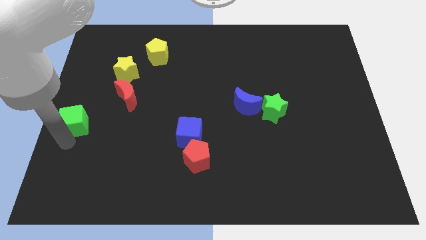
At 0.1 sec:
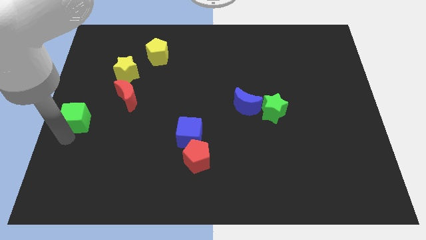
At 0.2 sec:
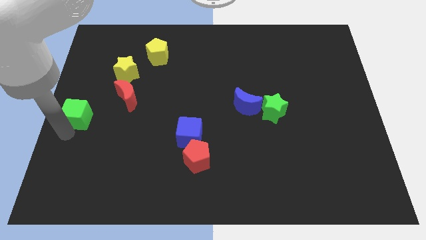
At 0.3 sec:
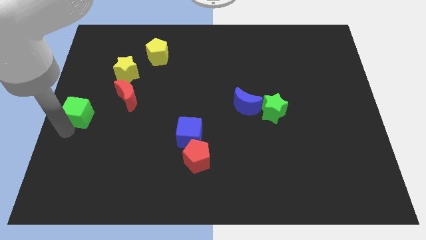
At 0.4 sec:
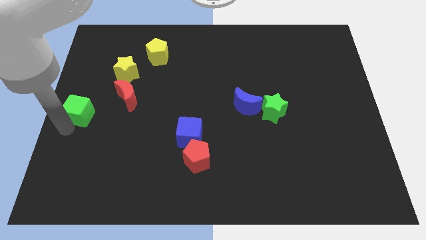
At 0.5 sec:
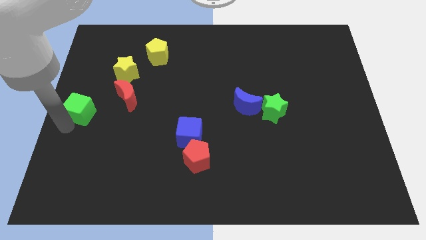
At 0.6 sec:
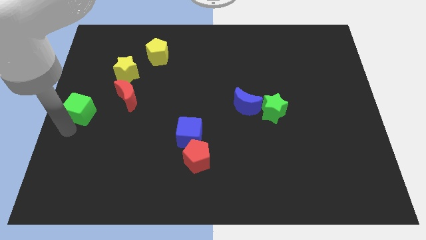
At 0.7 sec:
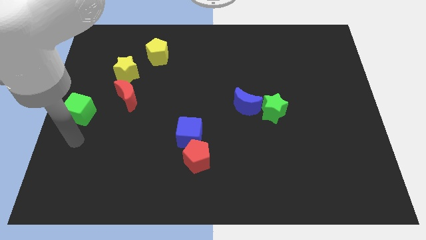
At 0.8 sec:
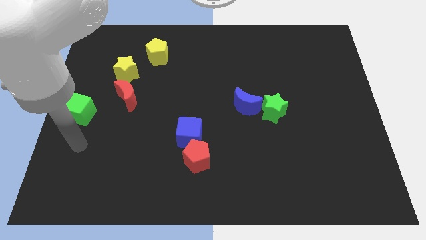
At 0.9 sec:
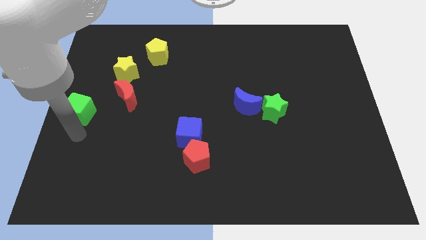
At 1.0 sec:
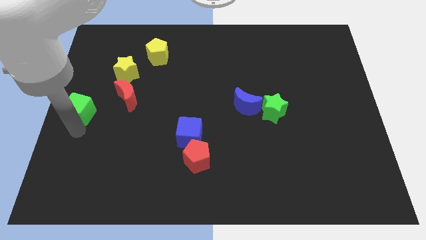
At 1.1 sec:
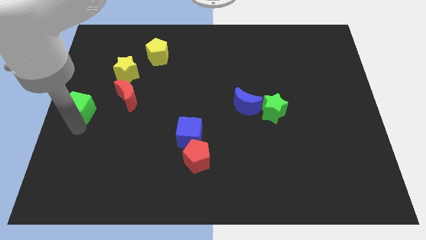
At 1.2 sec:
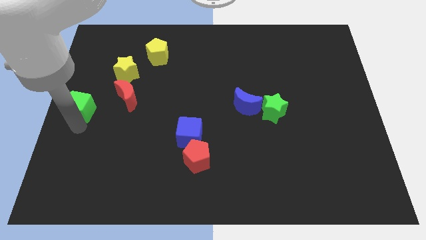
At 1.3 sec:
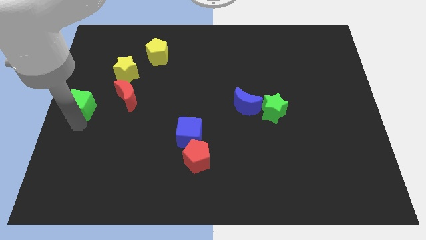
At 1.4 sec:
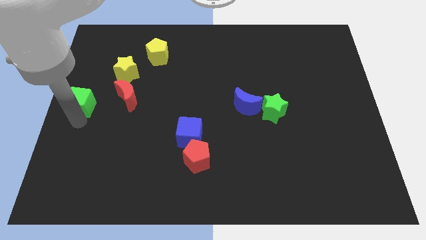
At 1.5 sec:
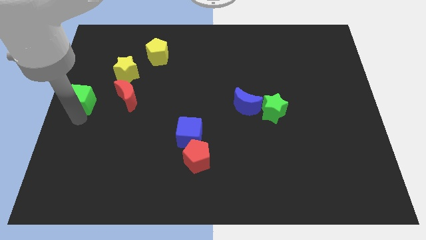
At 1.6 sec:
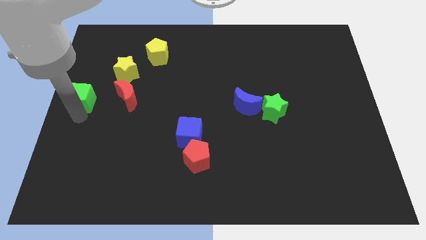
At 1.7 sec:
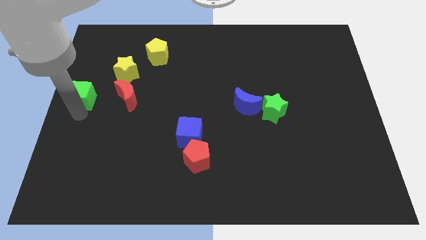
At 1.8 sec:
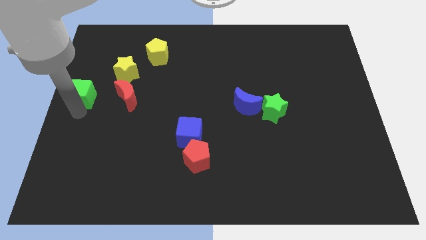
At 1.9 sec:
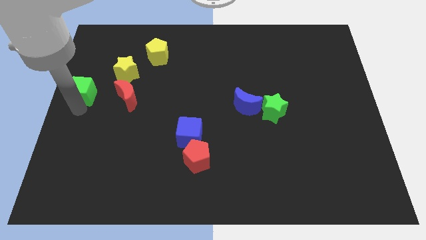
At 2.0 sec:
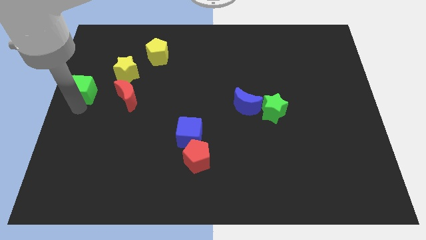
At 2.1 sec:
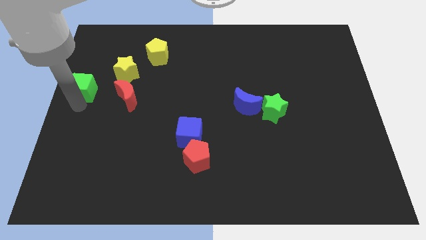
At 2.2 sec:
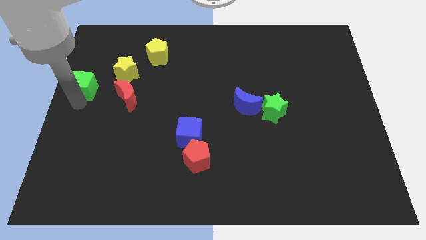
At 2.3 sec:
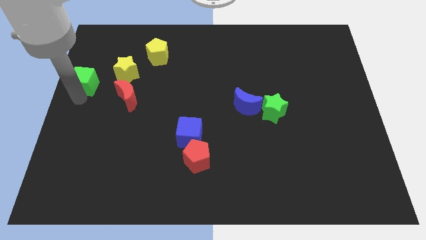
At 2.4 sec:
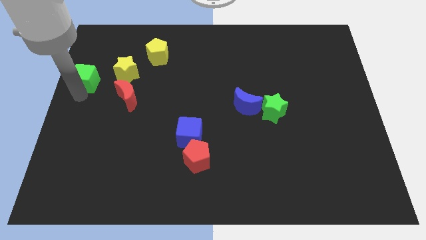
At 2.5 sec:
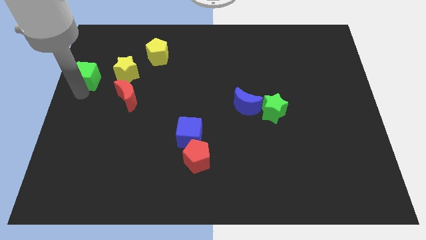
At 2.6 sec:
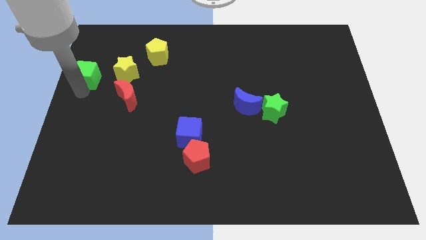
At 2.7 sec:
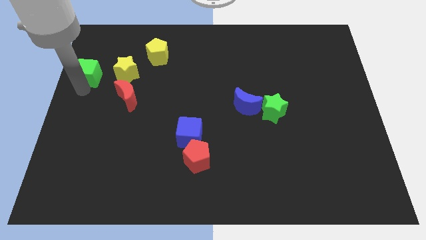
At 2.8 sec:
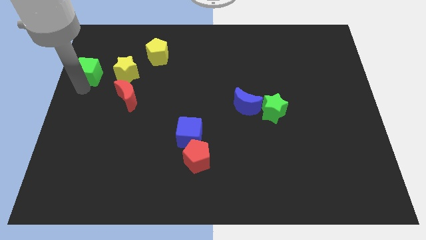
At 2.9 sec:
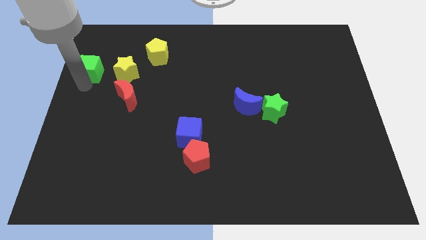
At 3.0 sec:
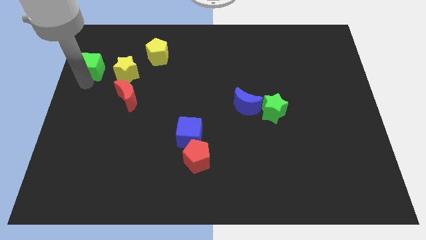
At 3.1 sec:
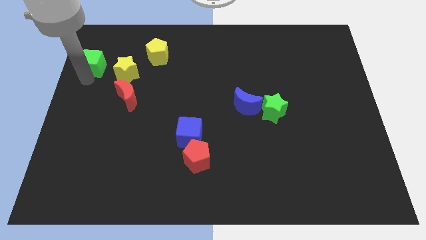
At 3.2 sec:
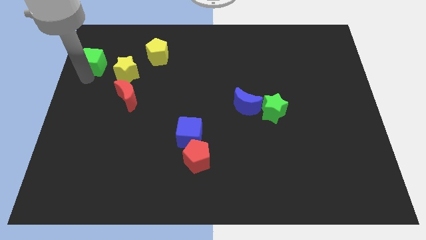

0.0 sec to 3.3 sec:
move the green cube to the left of the yellow star

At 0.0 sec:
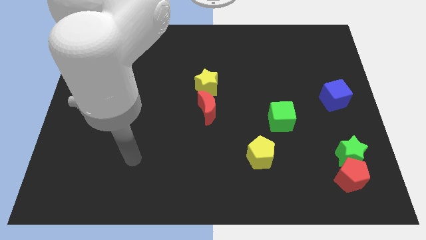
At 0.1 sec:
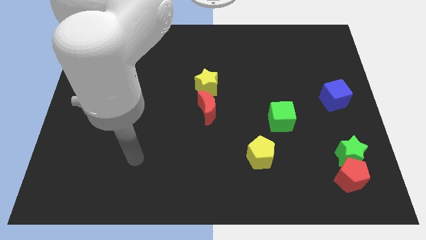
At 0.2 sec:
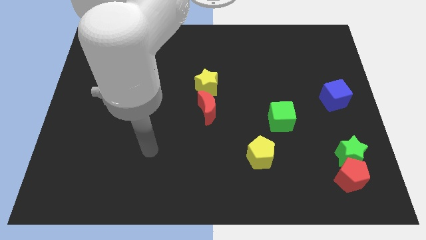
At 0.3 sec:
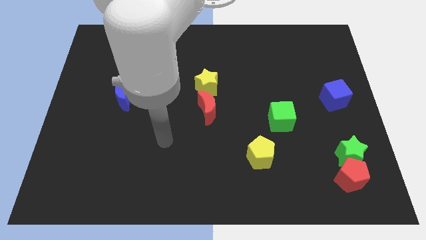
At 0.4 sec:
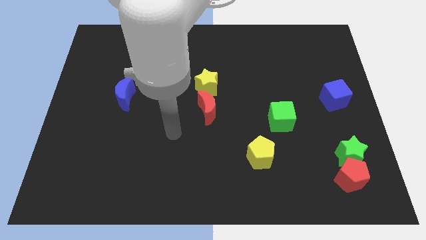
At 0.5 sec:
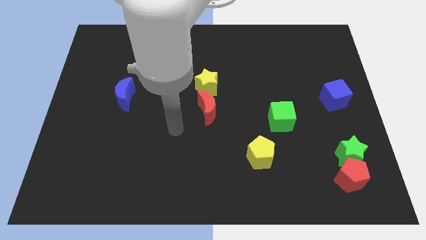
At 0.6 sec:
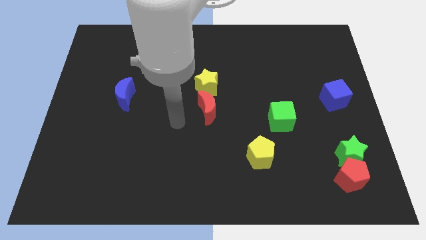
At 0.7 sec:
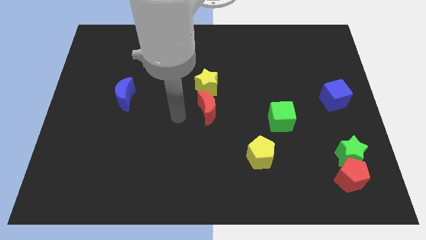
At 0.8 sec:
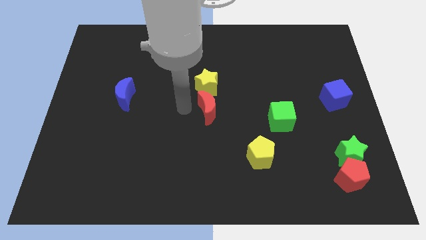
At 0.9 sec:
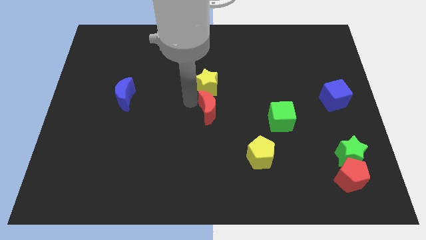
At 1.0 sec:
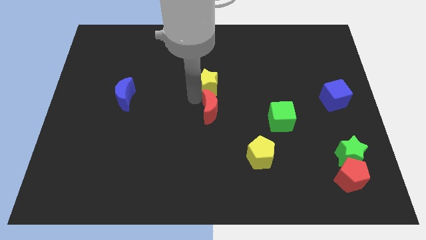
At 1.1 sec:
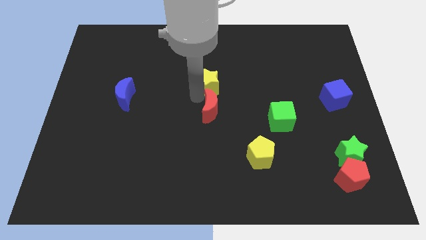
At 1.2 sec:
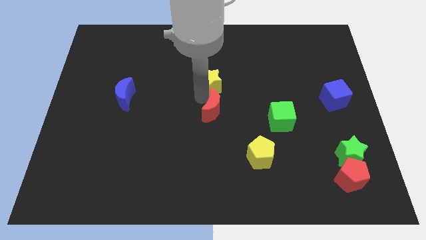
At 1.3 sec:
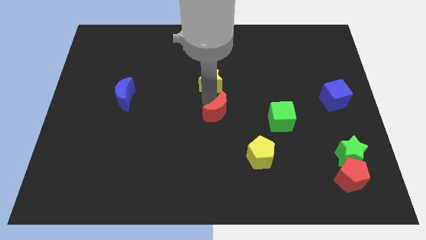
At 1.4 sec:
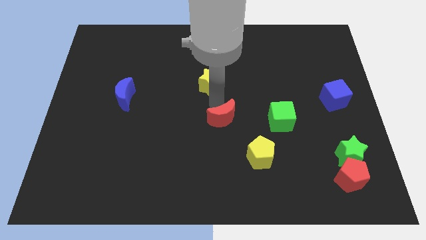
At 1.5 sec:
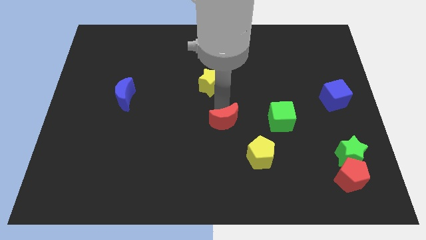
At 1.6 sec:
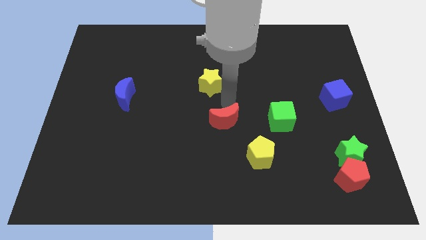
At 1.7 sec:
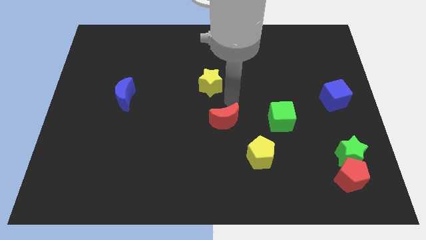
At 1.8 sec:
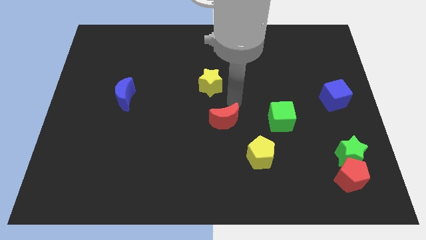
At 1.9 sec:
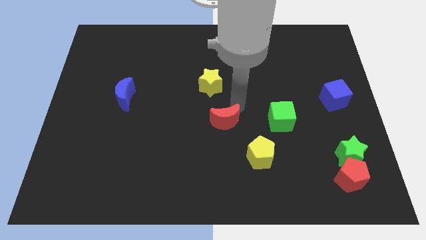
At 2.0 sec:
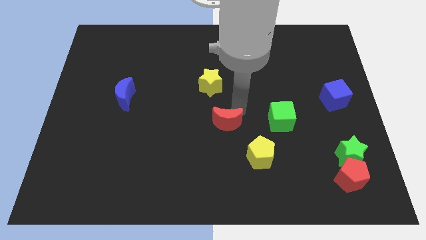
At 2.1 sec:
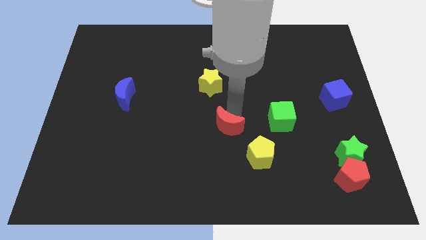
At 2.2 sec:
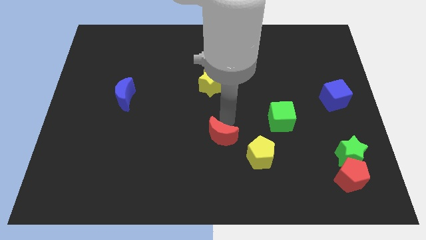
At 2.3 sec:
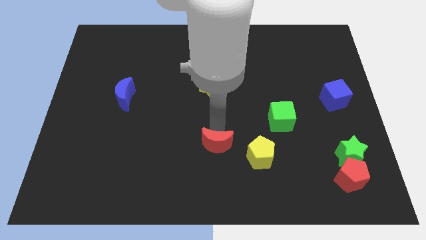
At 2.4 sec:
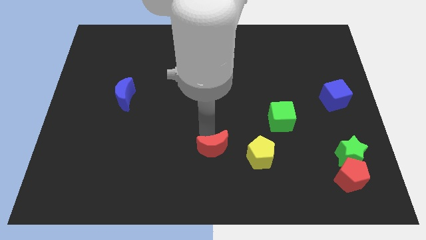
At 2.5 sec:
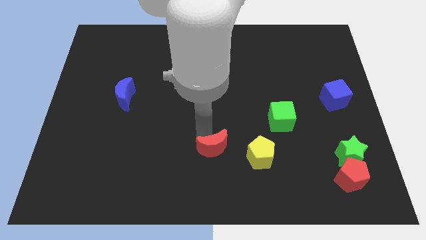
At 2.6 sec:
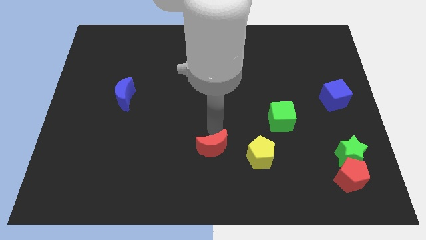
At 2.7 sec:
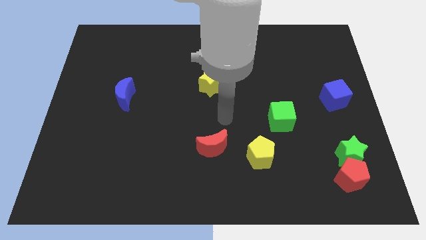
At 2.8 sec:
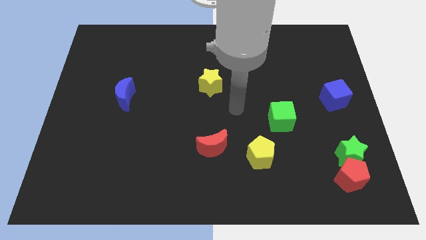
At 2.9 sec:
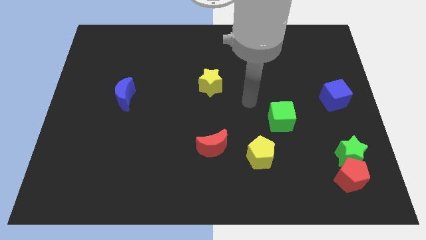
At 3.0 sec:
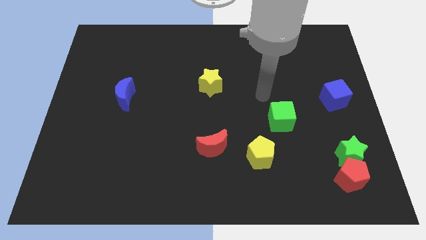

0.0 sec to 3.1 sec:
push the red crescent away from the yellow star

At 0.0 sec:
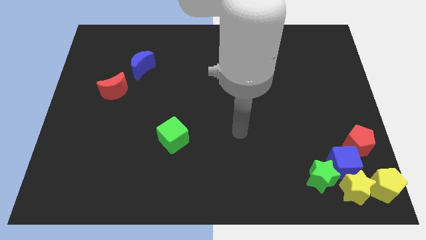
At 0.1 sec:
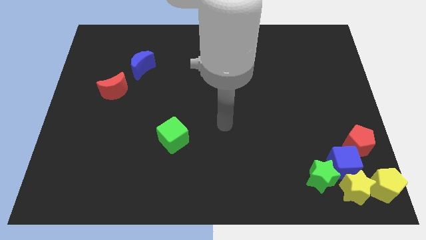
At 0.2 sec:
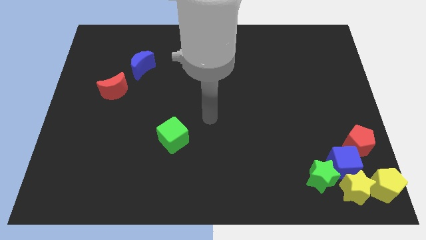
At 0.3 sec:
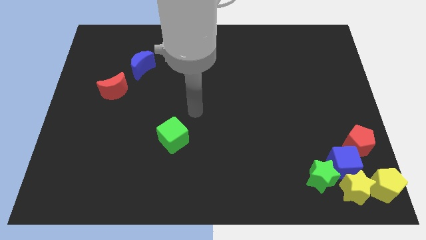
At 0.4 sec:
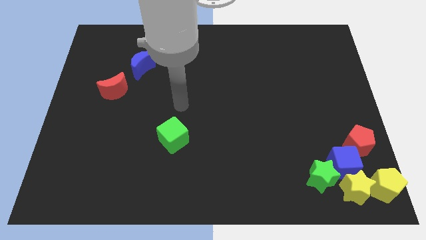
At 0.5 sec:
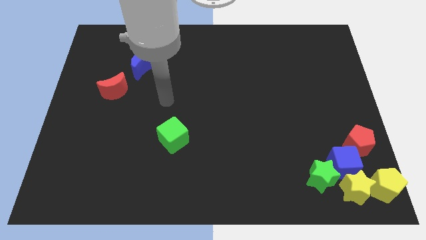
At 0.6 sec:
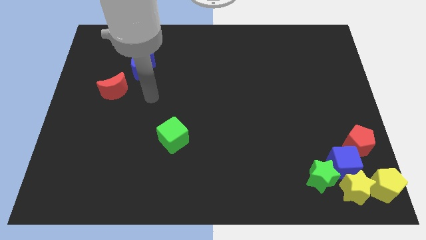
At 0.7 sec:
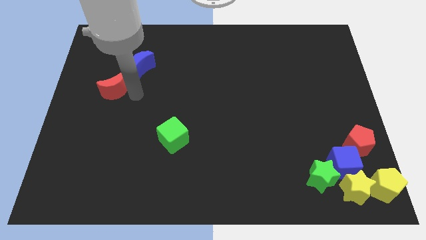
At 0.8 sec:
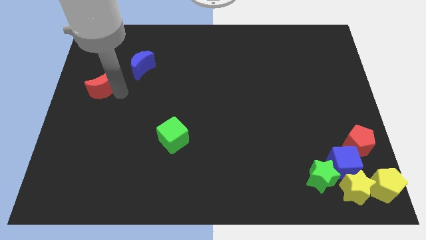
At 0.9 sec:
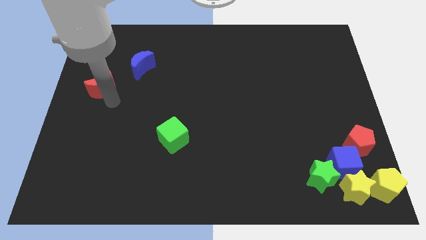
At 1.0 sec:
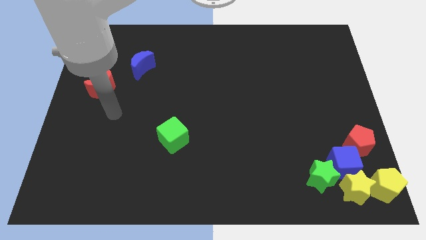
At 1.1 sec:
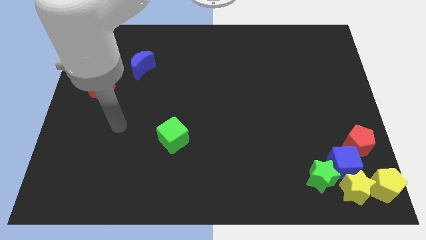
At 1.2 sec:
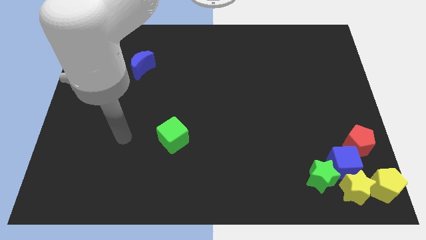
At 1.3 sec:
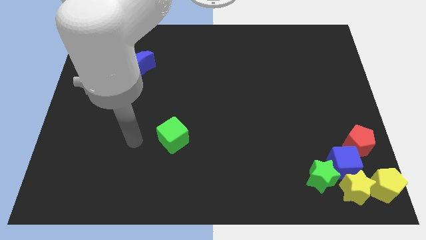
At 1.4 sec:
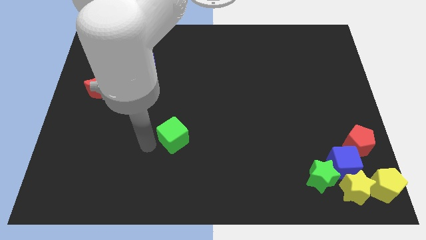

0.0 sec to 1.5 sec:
move the red crescent towards the top slightly

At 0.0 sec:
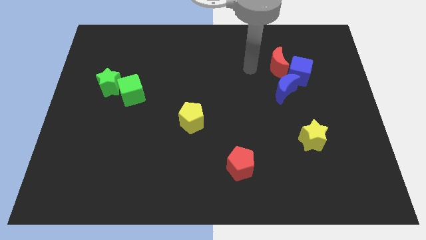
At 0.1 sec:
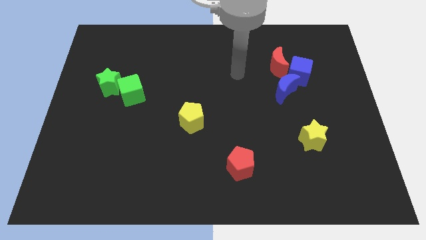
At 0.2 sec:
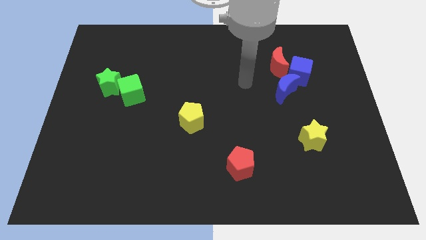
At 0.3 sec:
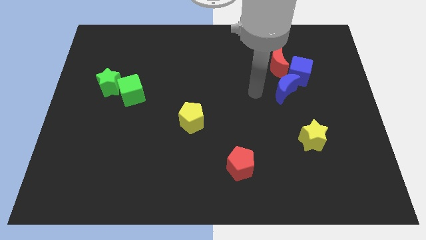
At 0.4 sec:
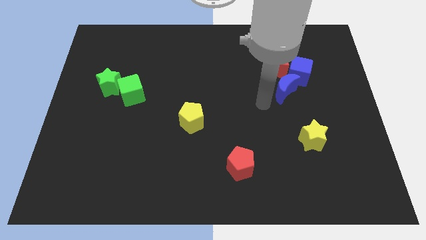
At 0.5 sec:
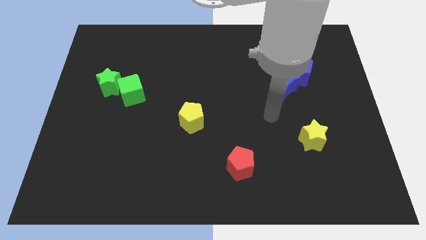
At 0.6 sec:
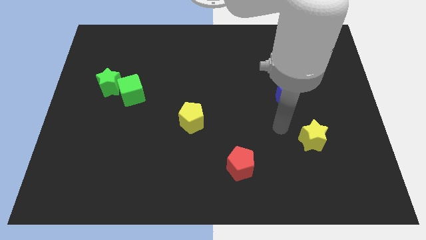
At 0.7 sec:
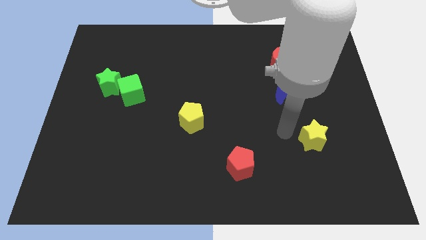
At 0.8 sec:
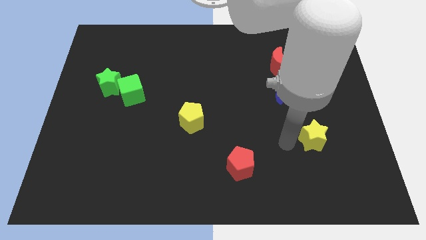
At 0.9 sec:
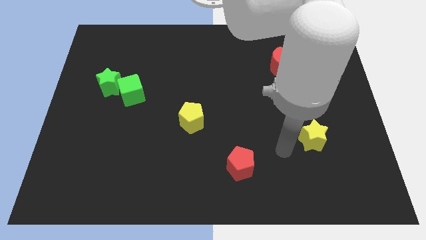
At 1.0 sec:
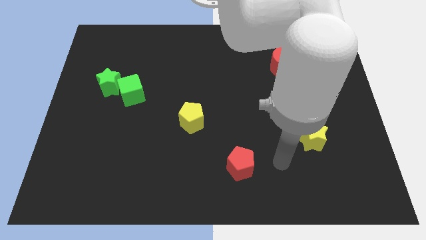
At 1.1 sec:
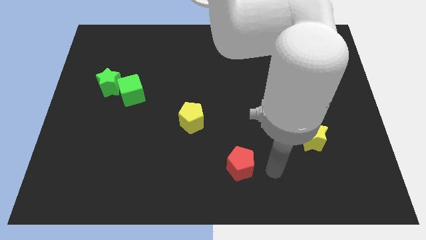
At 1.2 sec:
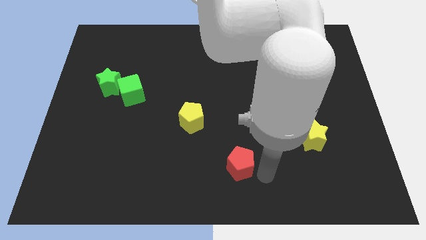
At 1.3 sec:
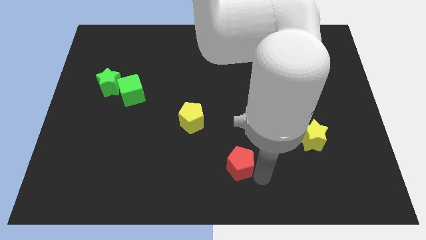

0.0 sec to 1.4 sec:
point your arm at the right of the red pentagon
